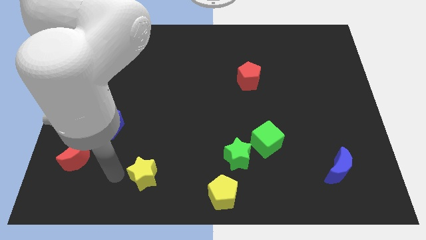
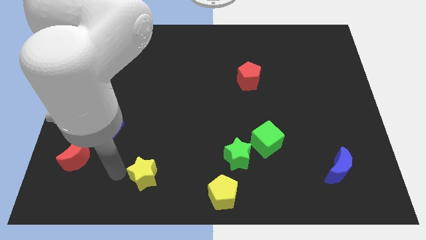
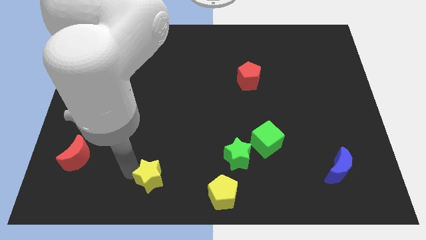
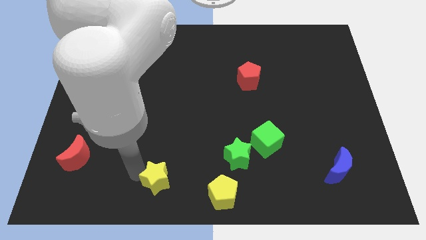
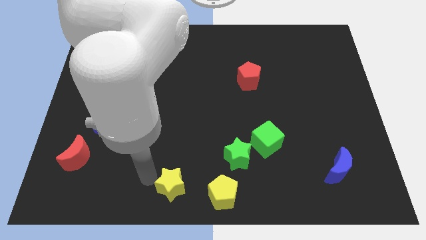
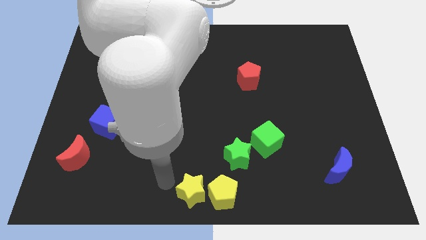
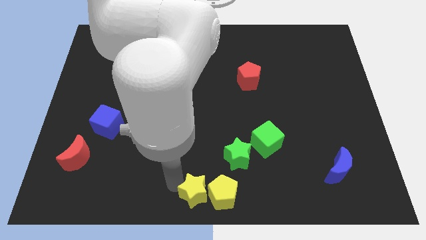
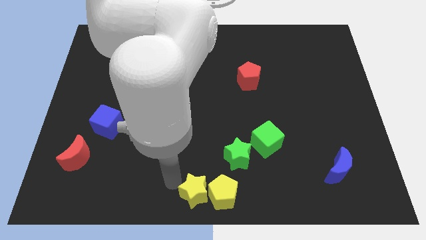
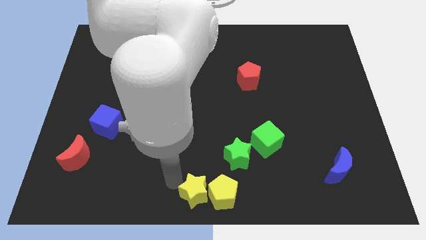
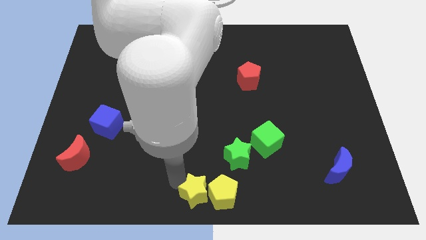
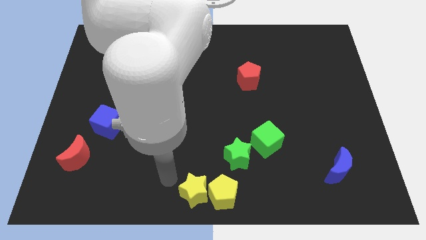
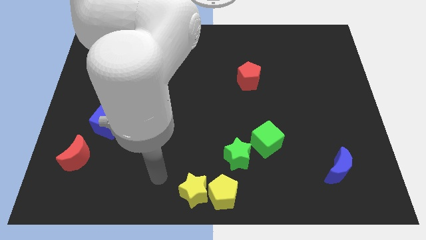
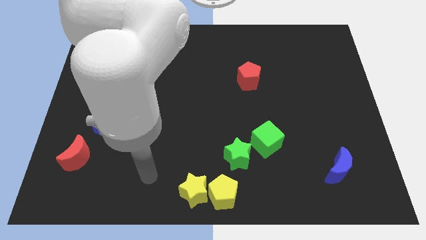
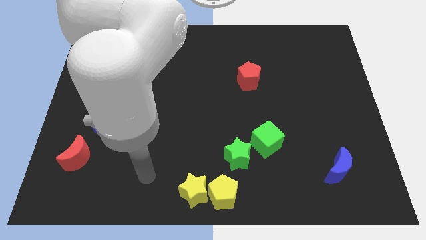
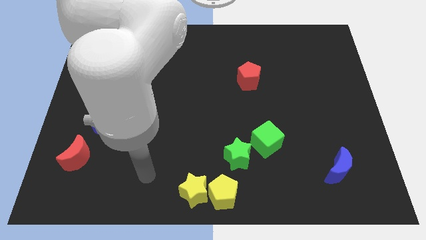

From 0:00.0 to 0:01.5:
place yellow star to the left side of yellow pentagon

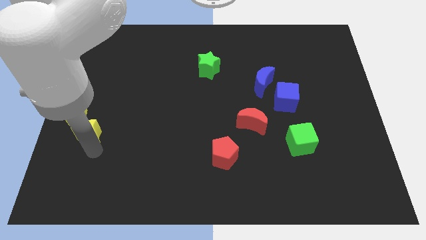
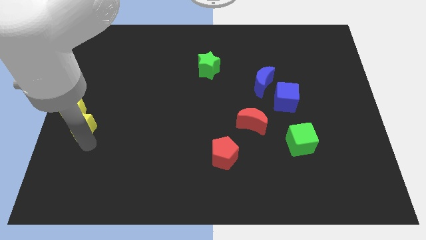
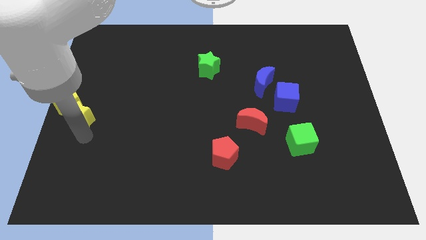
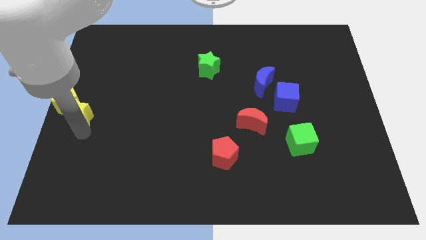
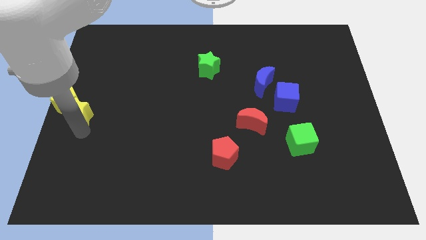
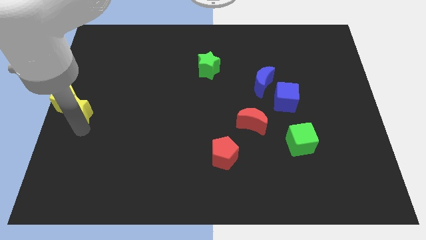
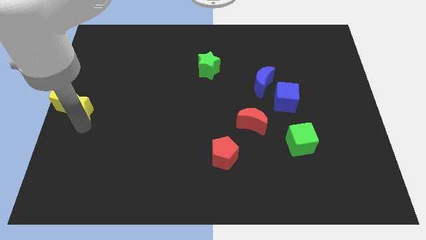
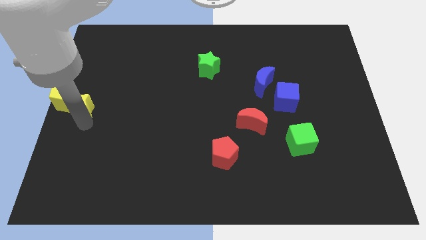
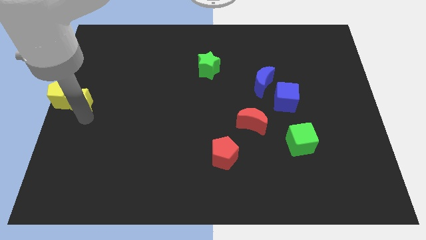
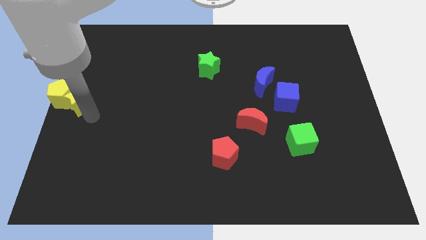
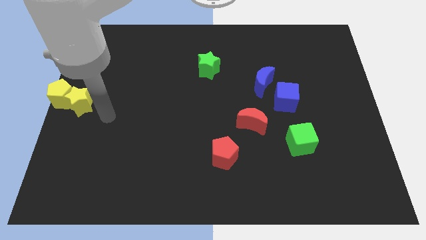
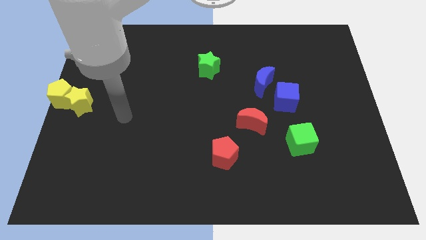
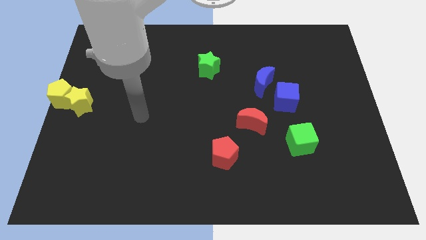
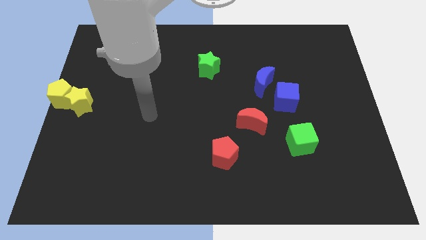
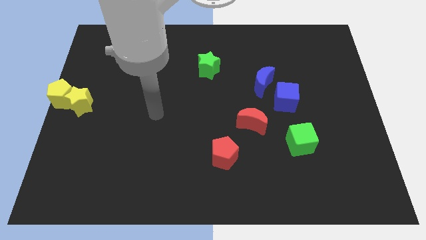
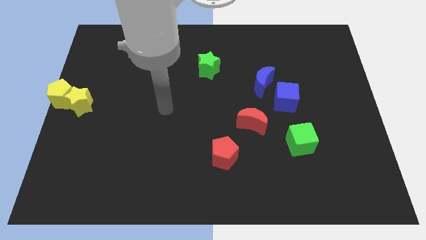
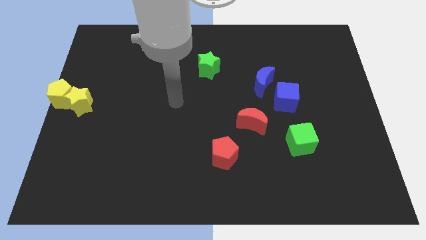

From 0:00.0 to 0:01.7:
push both the yellow star and yellow pentagon to the left center of the board

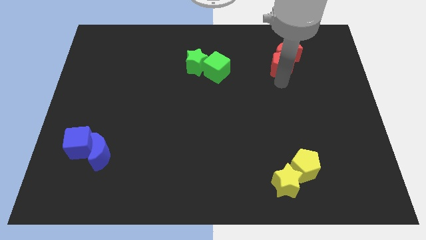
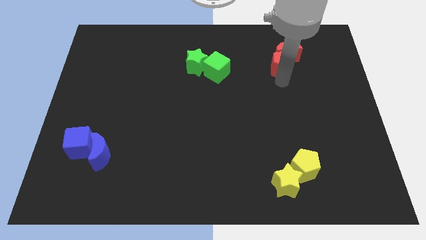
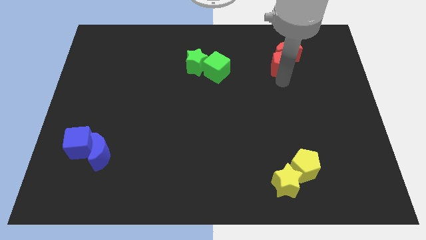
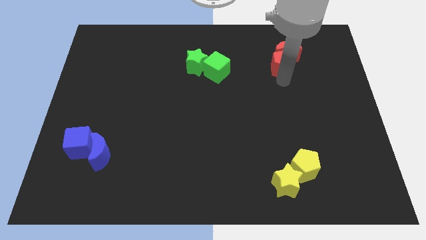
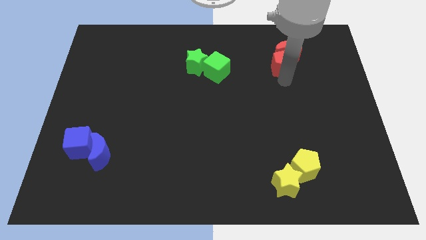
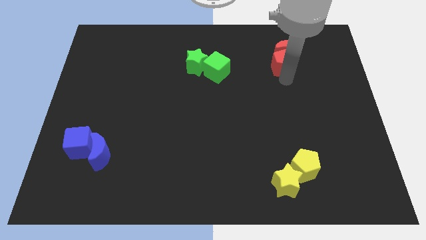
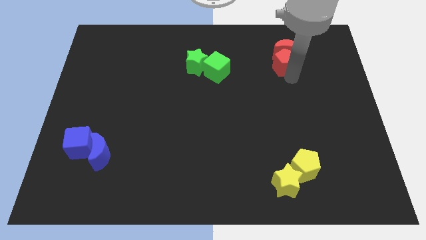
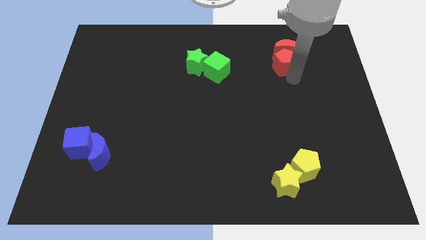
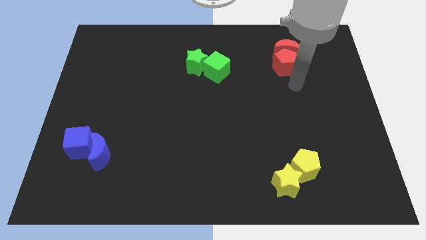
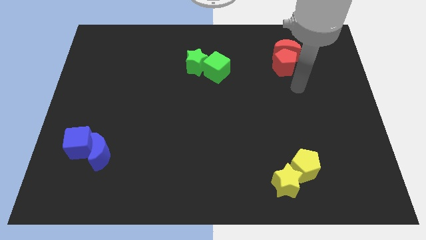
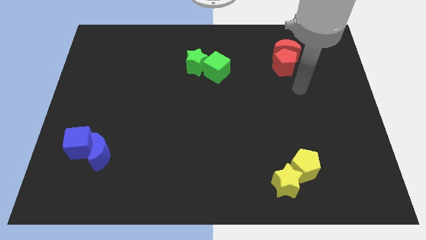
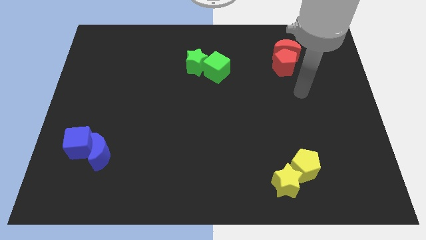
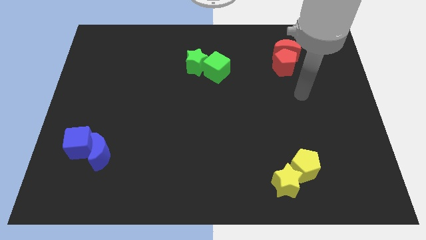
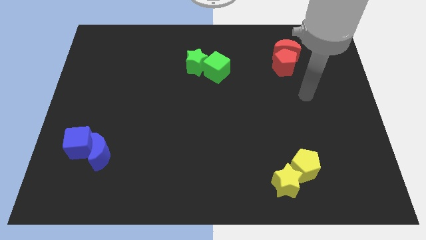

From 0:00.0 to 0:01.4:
move the red blocks slightly to the top of the board

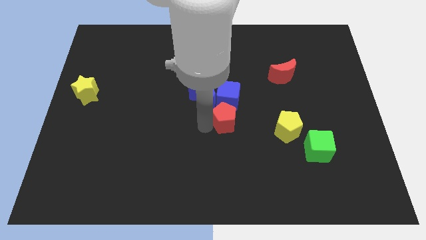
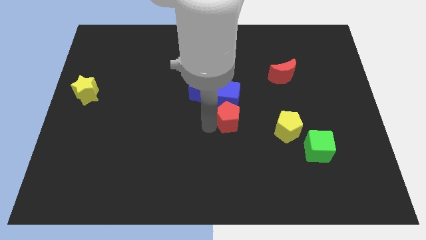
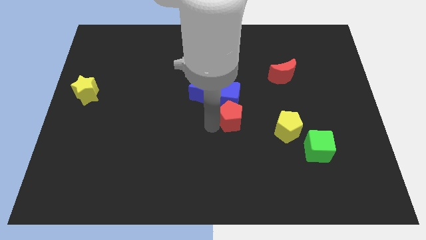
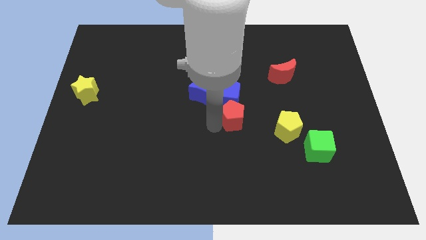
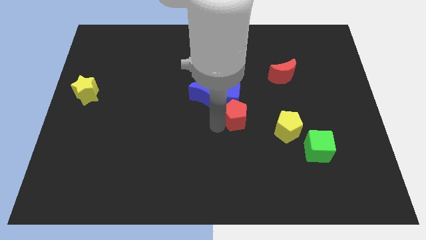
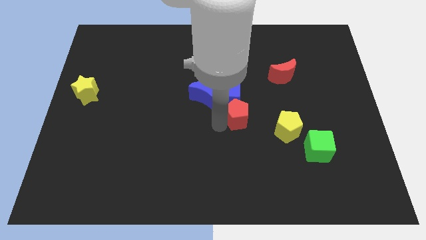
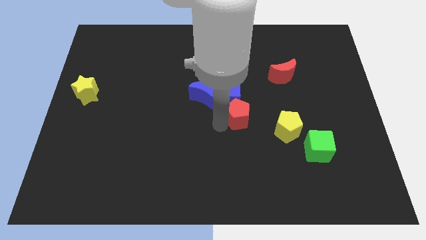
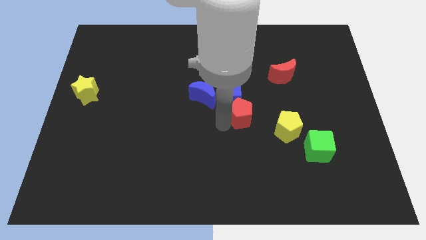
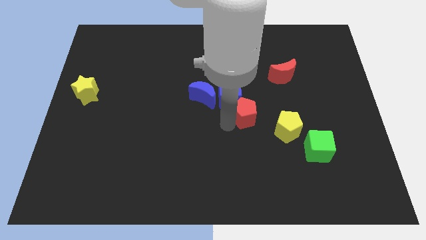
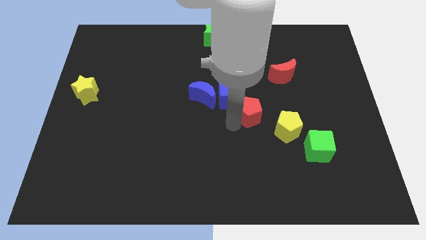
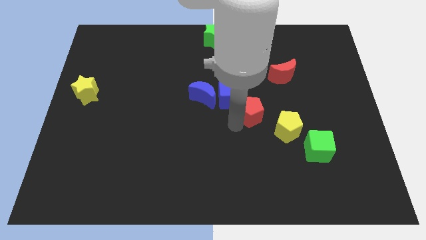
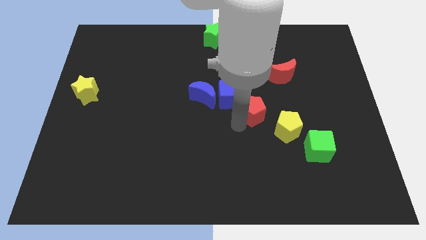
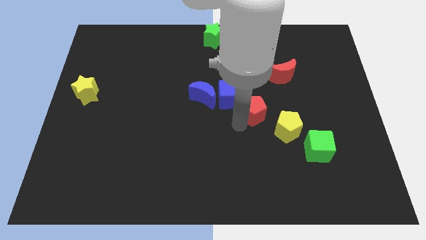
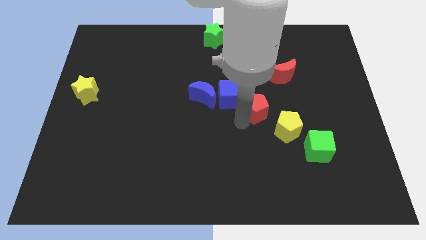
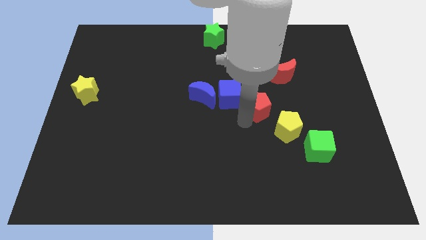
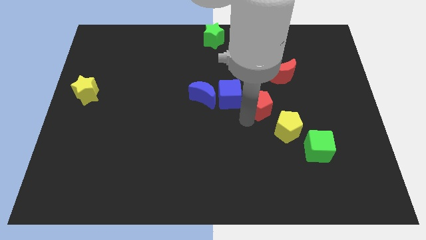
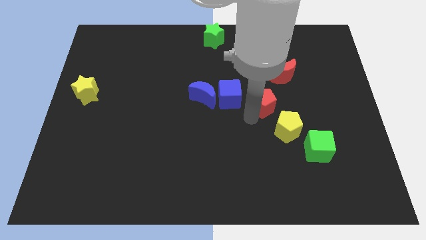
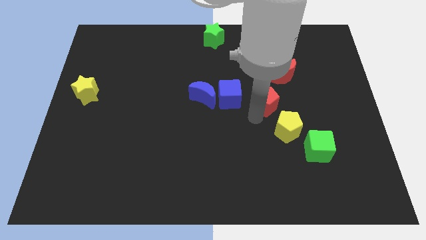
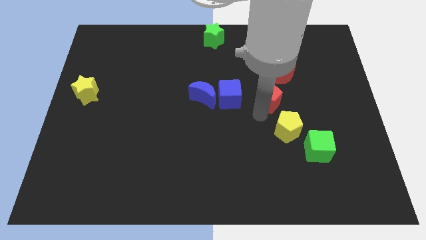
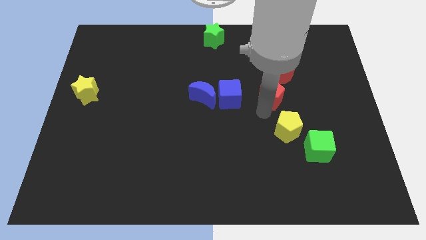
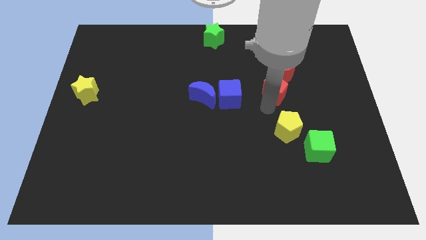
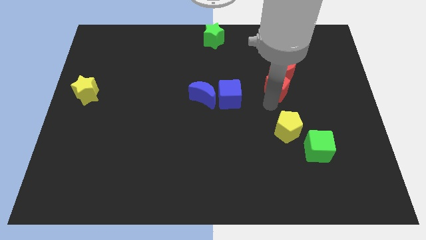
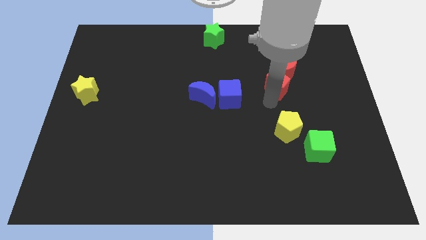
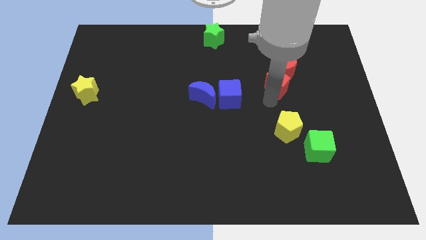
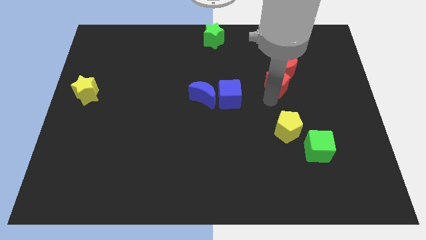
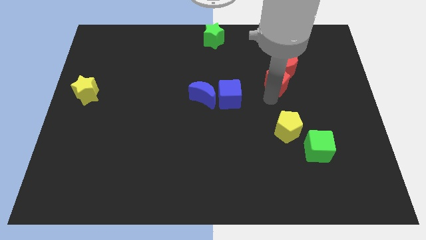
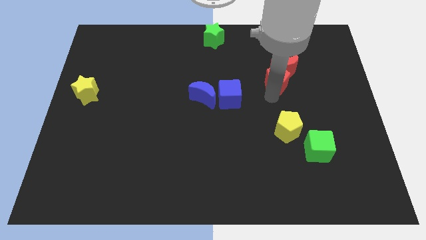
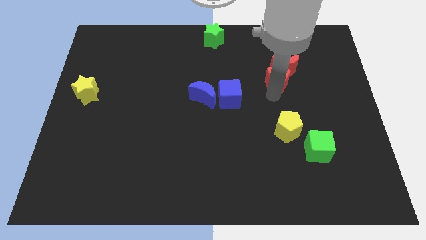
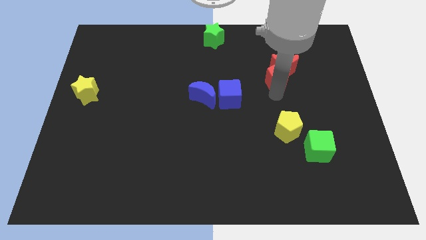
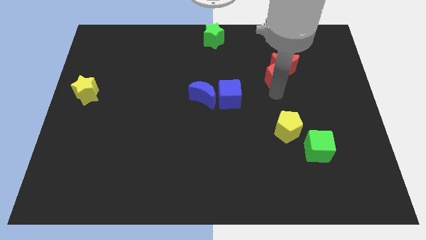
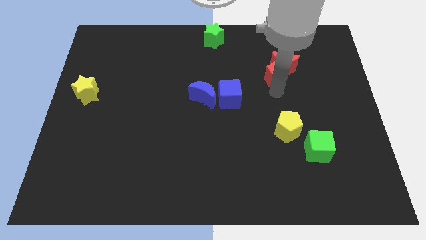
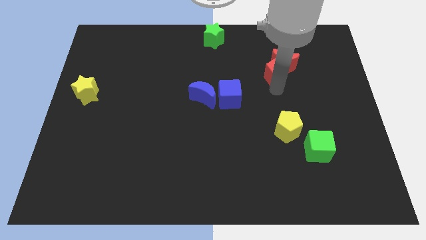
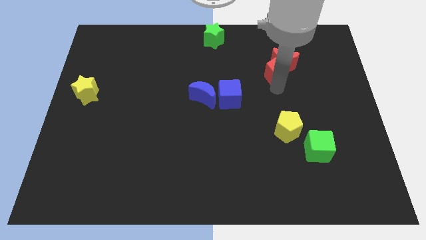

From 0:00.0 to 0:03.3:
push the red pentagon into the red moon

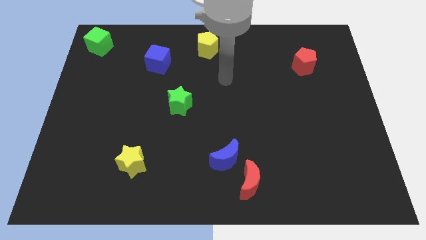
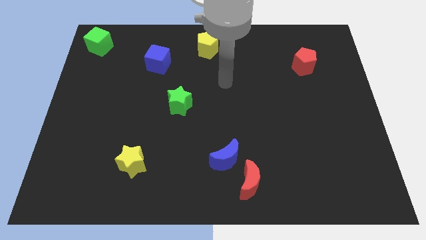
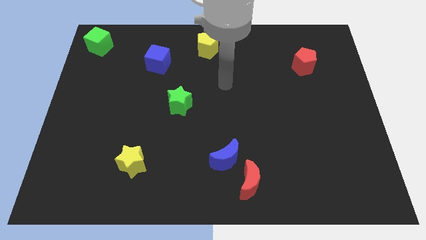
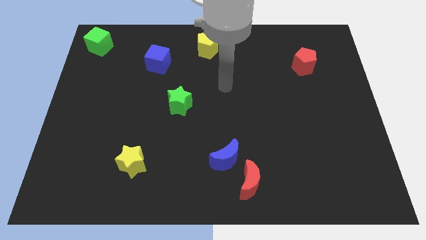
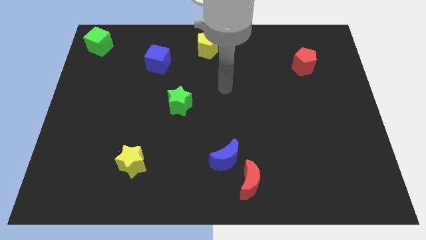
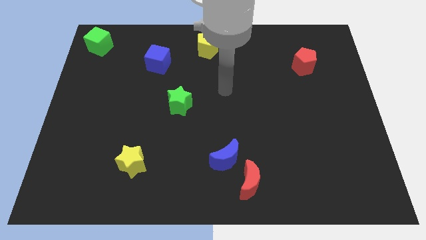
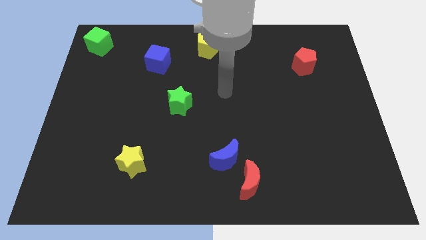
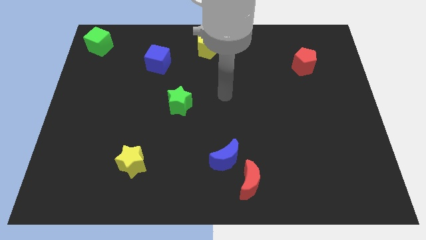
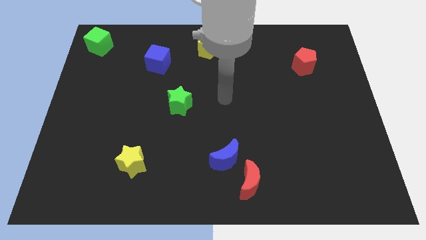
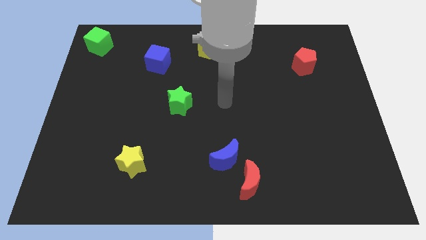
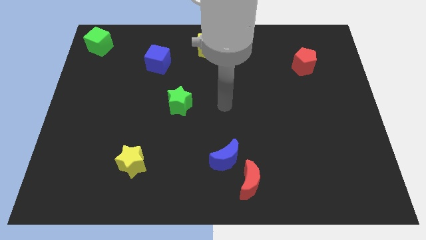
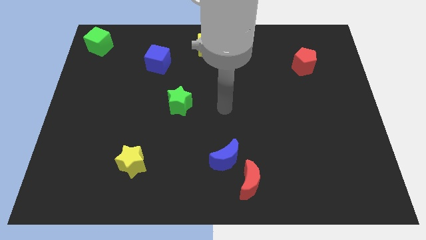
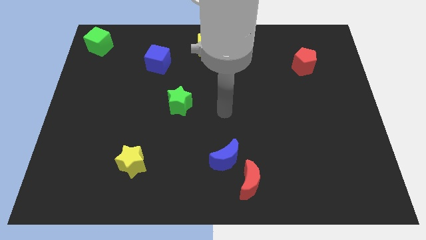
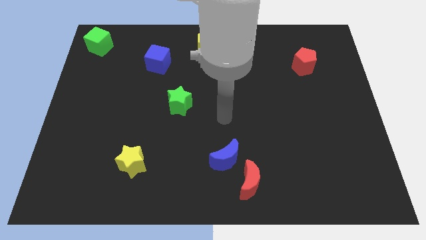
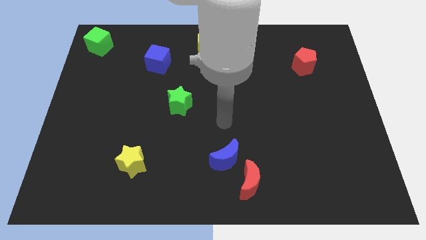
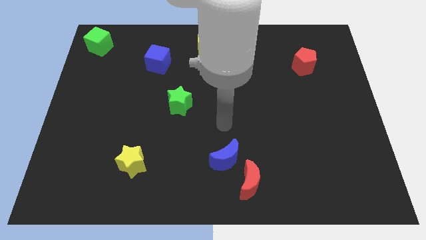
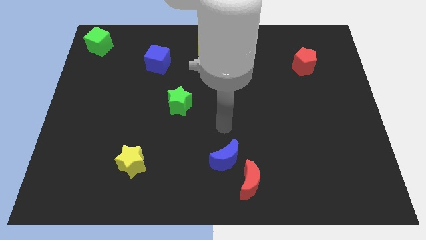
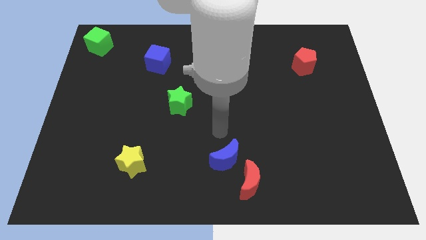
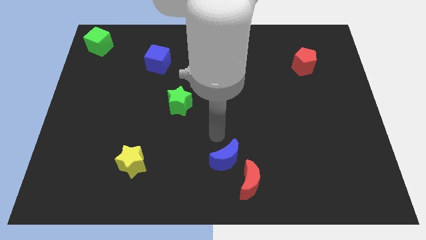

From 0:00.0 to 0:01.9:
place your arm to the top of blue moon
